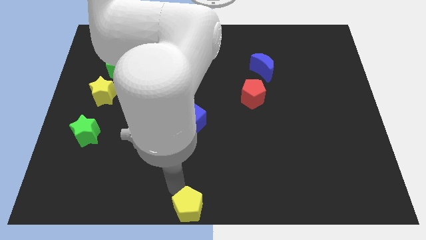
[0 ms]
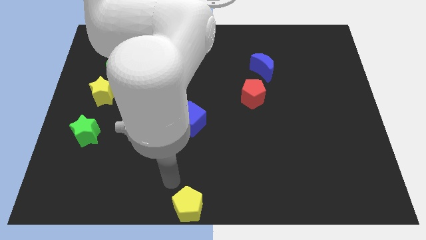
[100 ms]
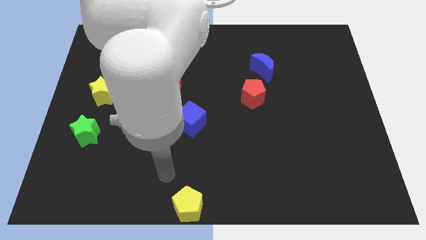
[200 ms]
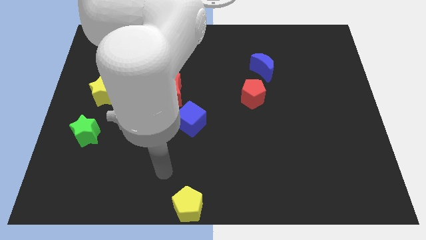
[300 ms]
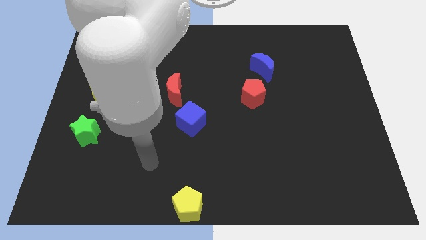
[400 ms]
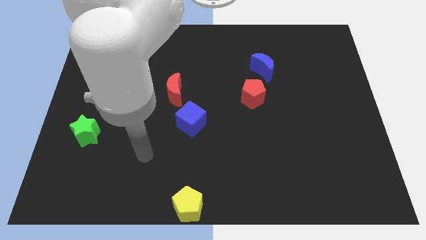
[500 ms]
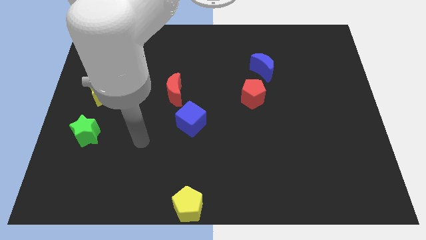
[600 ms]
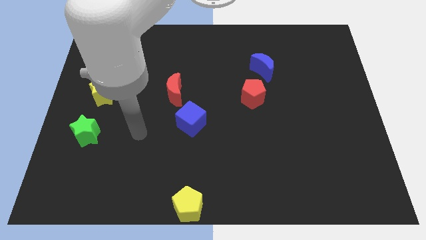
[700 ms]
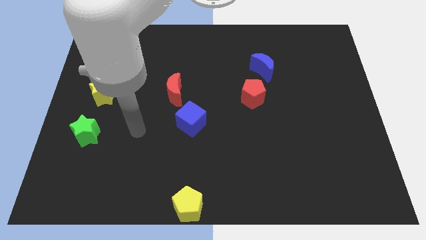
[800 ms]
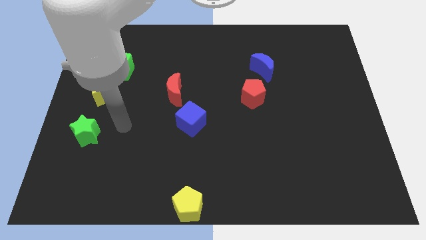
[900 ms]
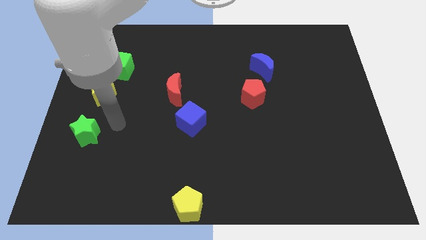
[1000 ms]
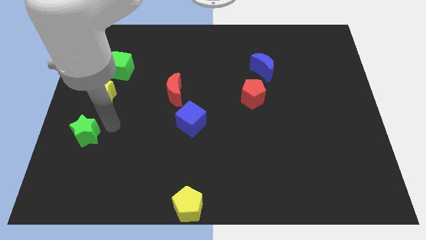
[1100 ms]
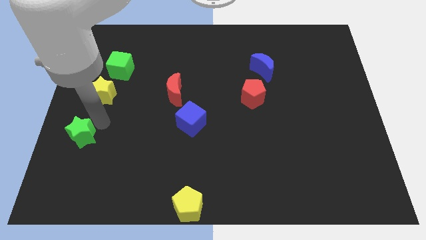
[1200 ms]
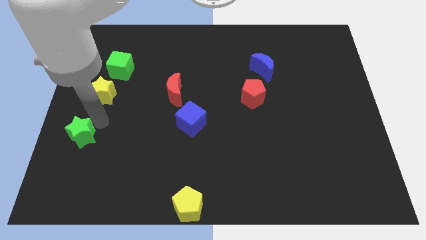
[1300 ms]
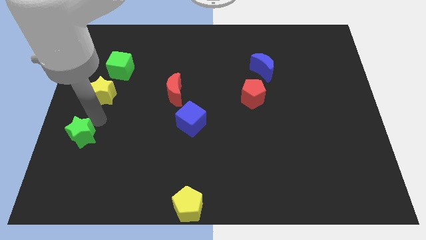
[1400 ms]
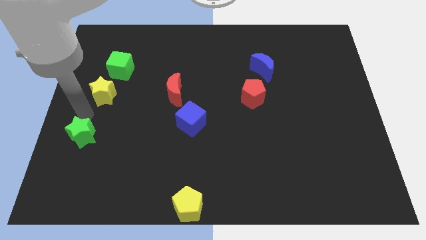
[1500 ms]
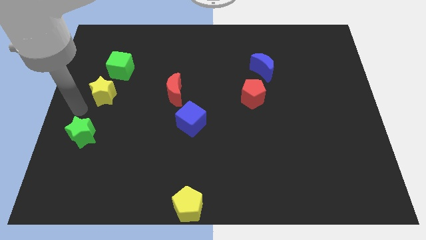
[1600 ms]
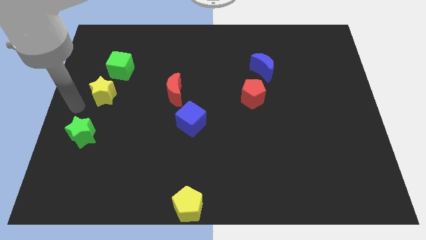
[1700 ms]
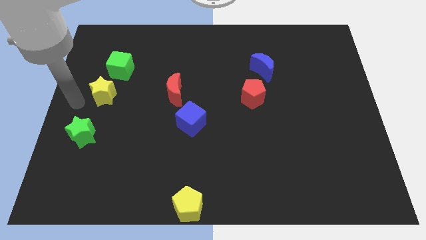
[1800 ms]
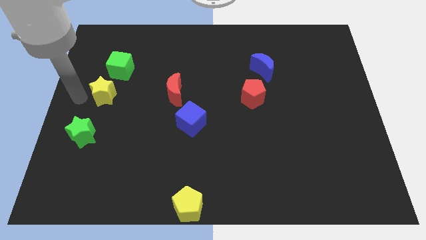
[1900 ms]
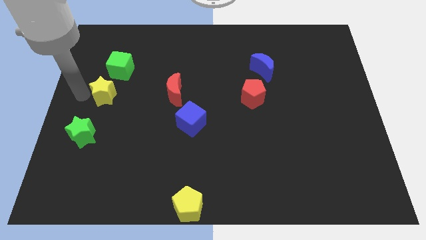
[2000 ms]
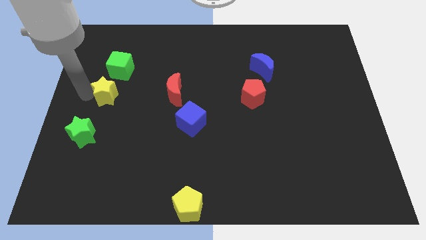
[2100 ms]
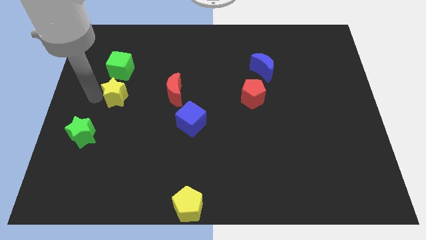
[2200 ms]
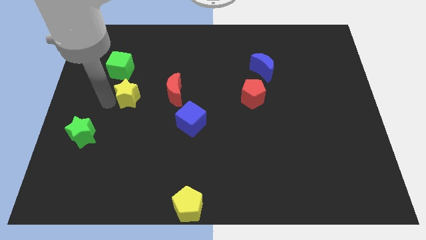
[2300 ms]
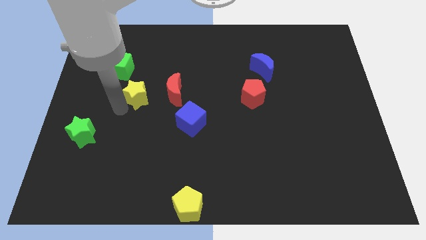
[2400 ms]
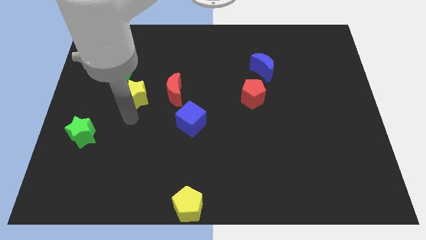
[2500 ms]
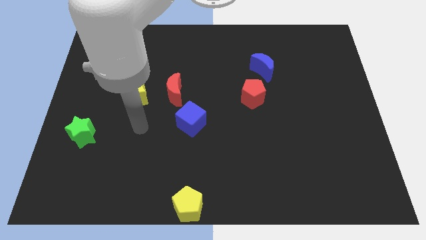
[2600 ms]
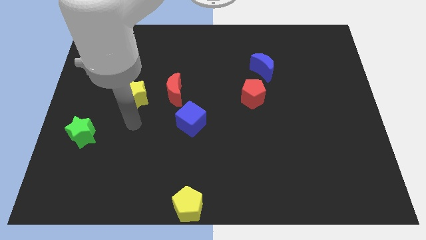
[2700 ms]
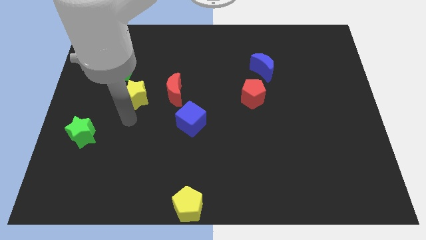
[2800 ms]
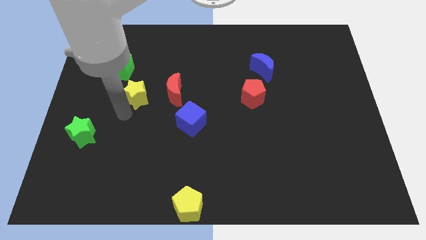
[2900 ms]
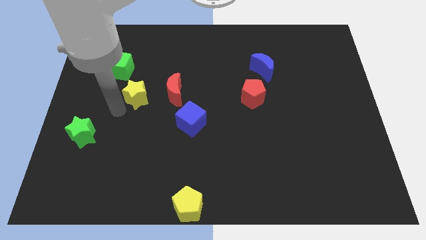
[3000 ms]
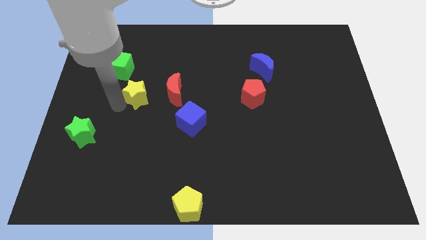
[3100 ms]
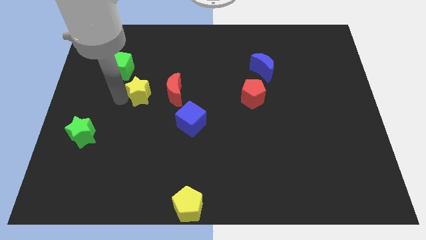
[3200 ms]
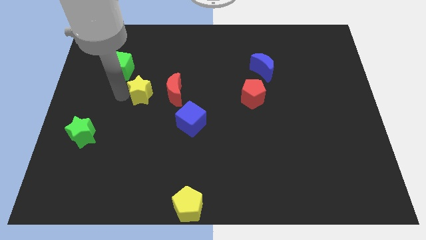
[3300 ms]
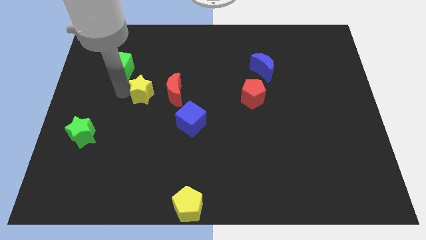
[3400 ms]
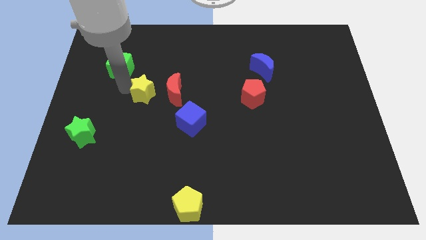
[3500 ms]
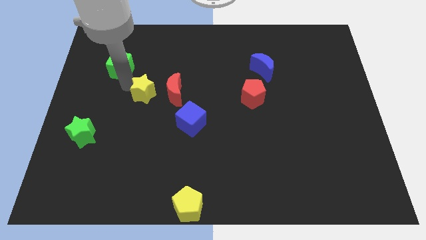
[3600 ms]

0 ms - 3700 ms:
push the yellow star to the bottom right of the green cube

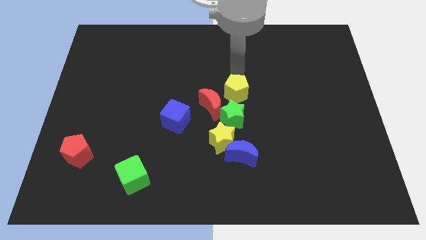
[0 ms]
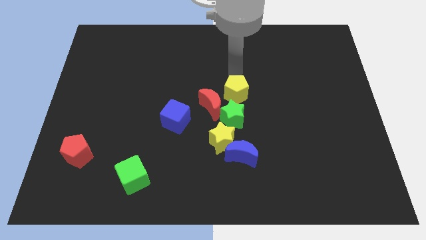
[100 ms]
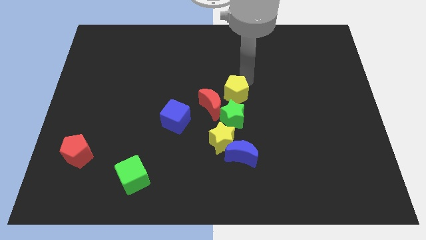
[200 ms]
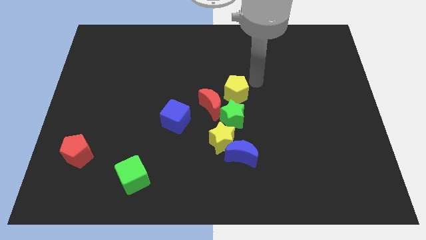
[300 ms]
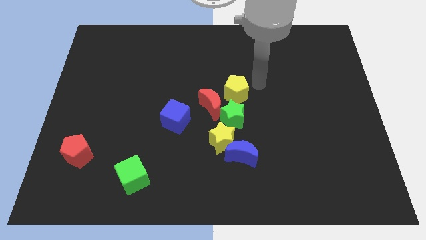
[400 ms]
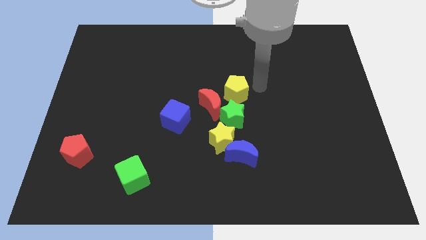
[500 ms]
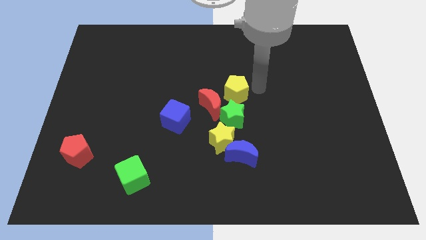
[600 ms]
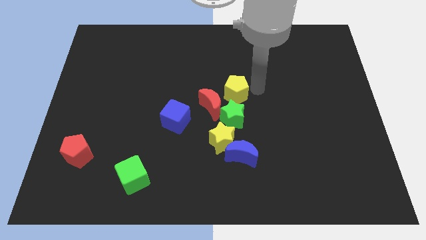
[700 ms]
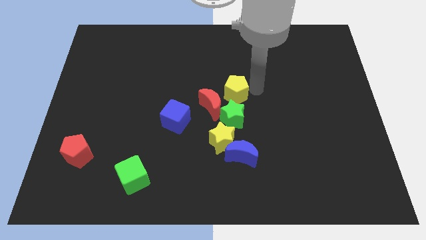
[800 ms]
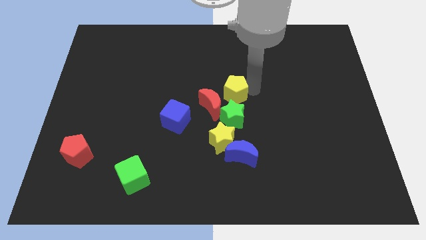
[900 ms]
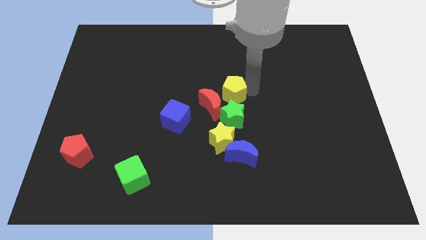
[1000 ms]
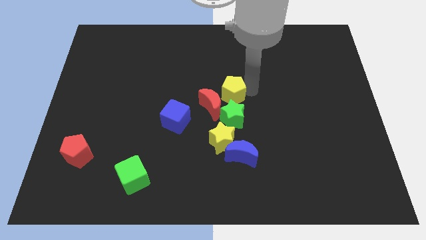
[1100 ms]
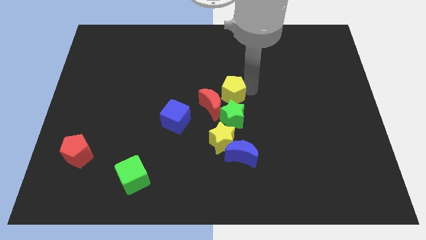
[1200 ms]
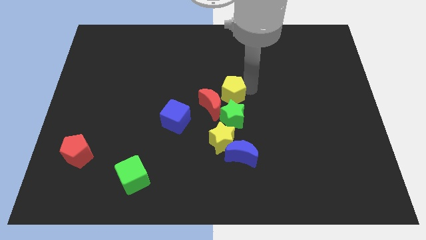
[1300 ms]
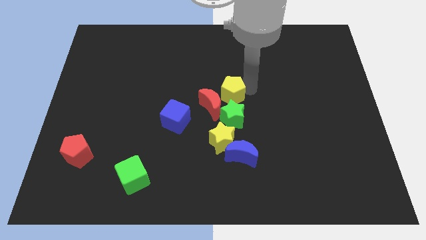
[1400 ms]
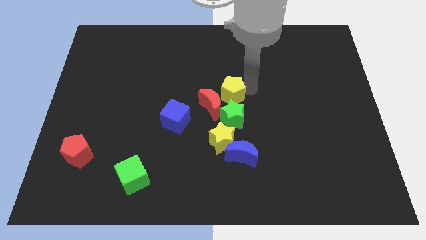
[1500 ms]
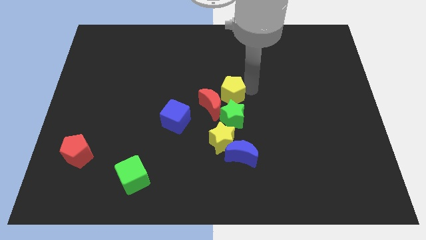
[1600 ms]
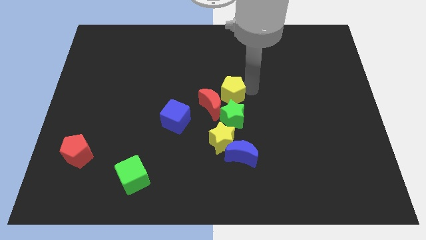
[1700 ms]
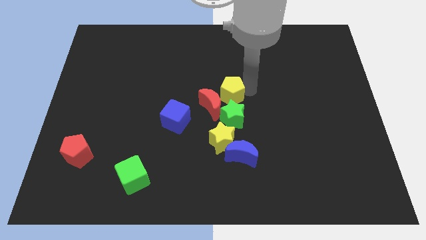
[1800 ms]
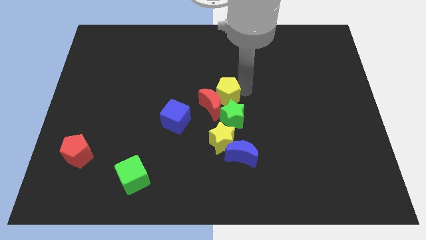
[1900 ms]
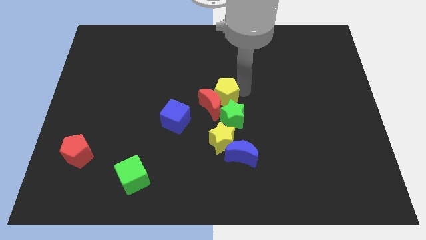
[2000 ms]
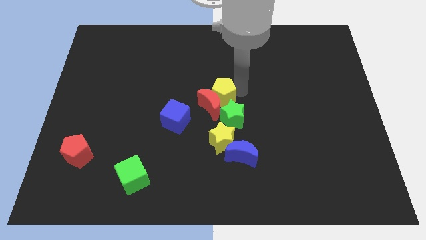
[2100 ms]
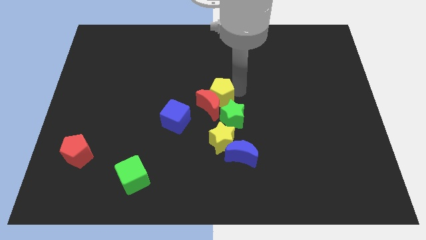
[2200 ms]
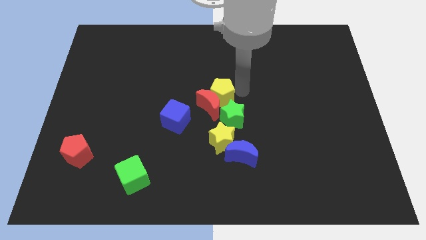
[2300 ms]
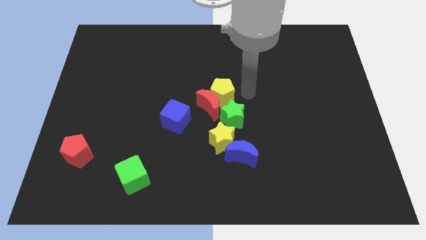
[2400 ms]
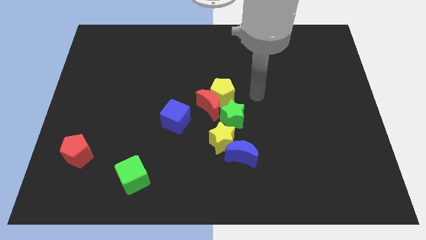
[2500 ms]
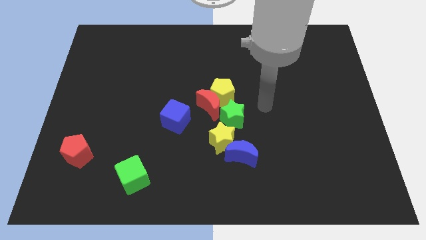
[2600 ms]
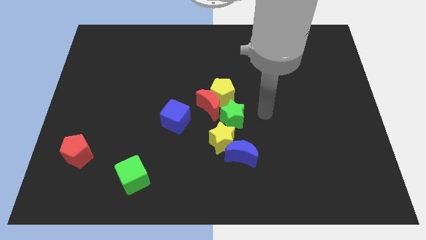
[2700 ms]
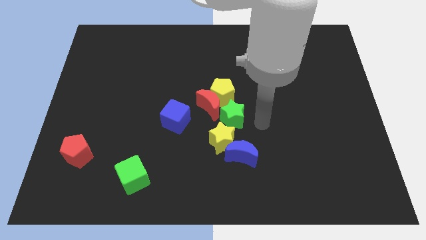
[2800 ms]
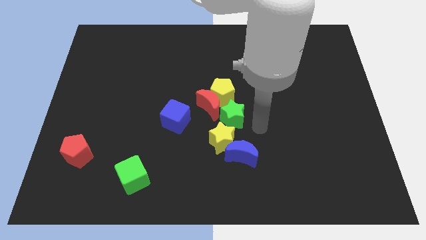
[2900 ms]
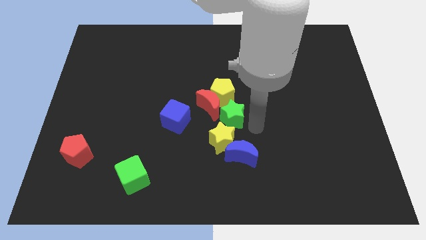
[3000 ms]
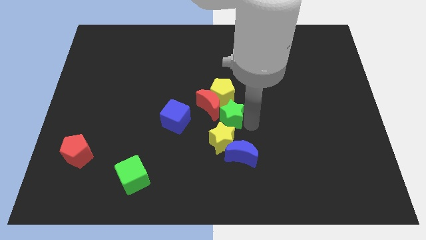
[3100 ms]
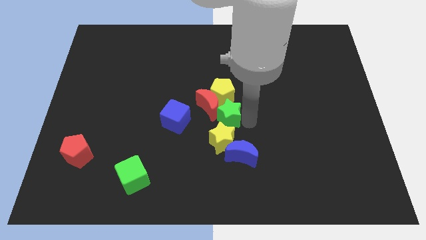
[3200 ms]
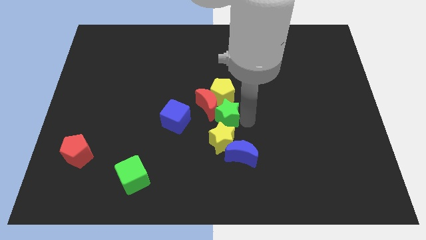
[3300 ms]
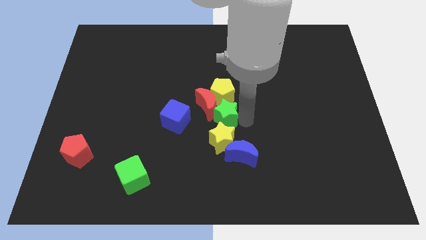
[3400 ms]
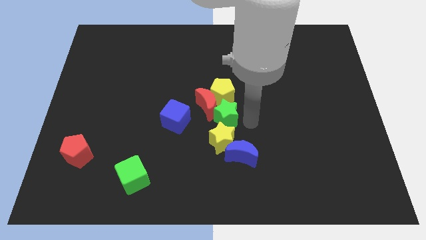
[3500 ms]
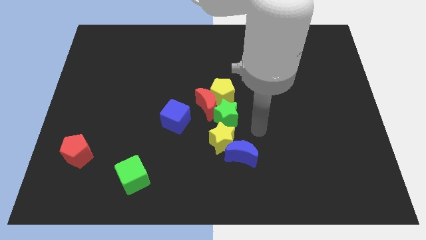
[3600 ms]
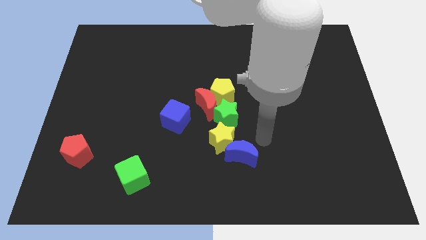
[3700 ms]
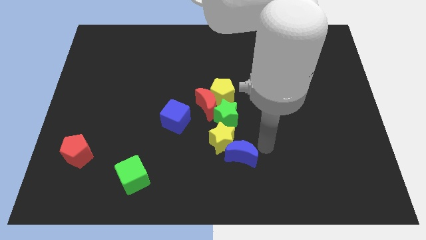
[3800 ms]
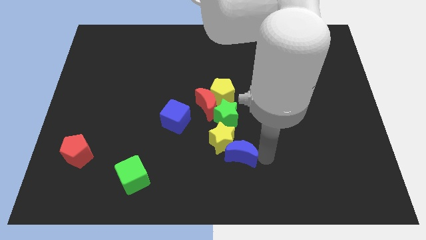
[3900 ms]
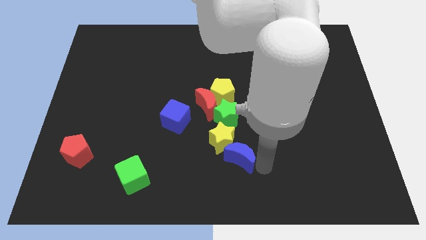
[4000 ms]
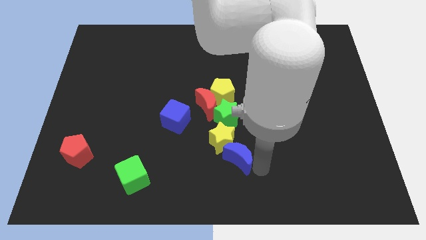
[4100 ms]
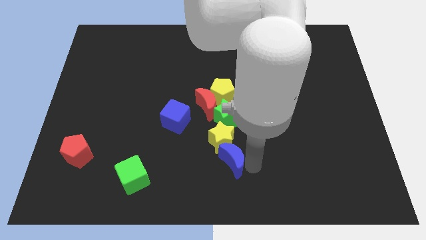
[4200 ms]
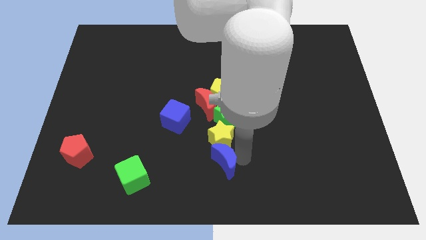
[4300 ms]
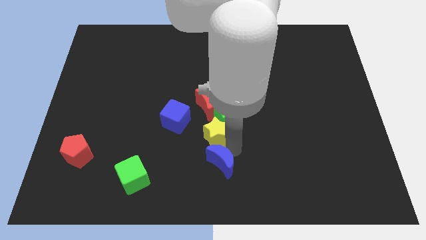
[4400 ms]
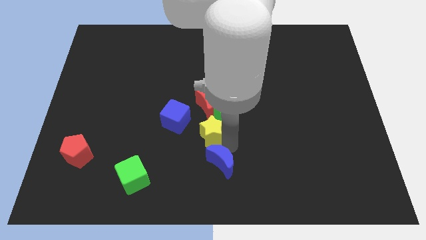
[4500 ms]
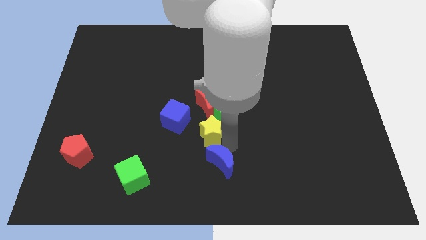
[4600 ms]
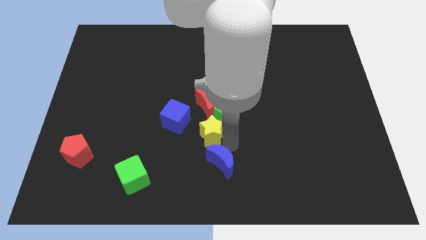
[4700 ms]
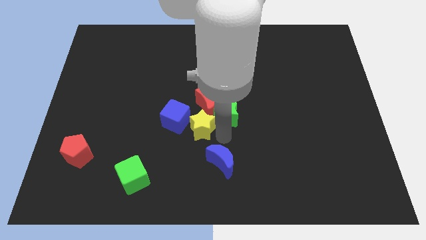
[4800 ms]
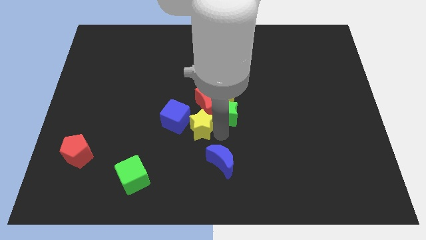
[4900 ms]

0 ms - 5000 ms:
separate the yellow star from the blue moon

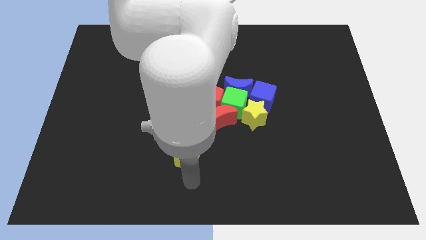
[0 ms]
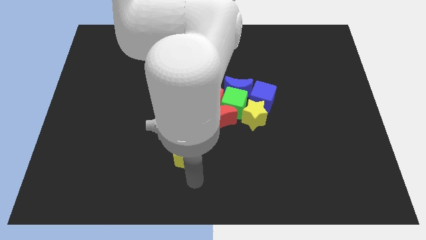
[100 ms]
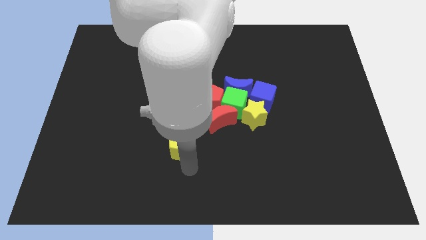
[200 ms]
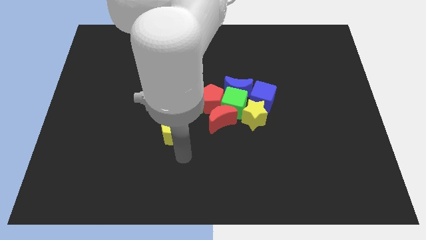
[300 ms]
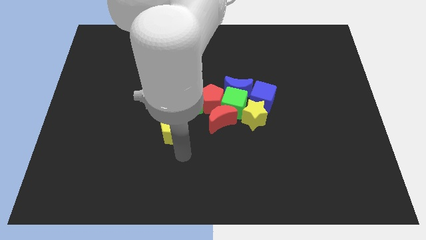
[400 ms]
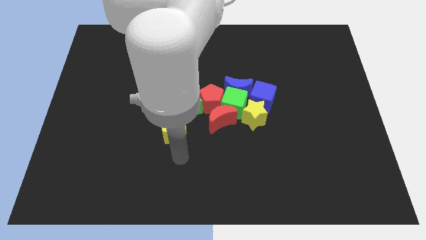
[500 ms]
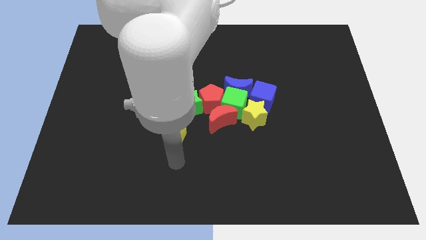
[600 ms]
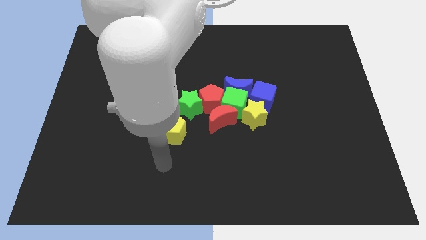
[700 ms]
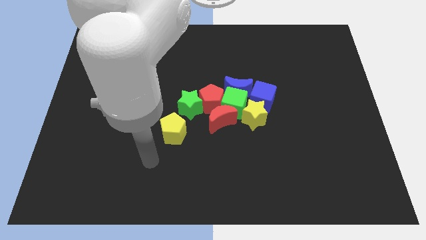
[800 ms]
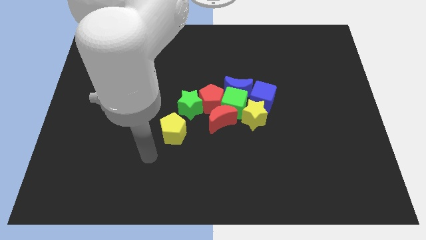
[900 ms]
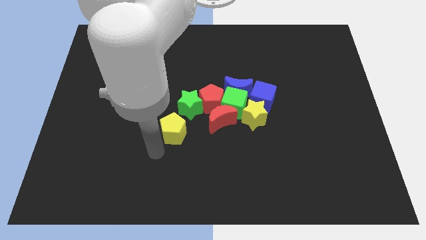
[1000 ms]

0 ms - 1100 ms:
place the yellow pentagon towards the bottom left side of the green star
